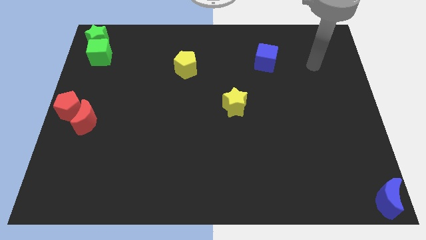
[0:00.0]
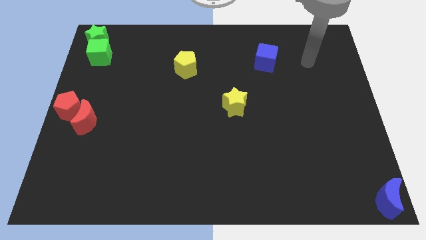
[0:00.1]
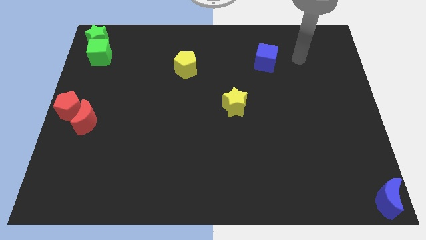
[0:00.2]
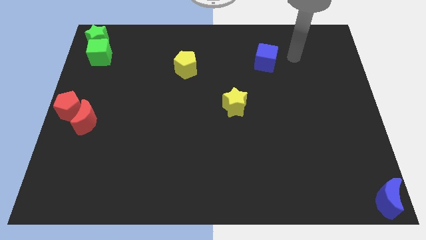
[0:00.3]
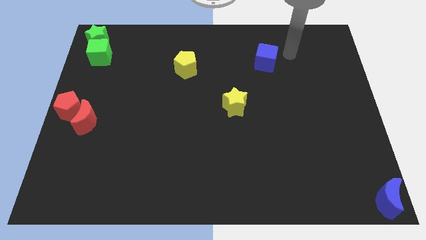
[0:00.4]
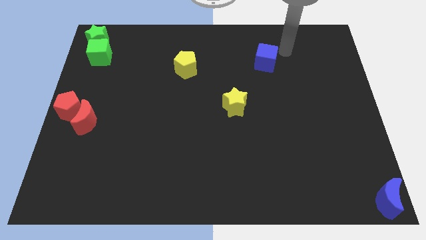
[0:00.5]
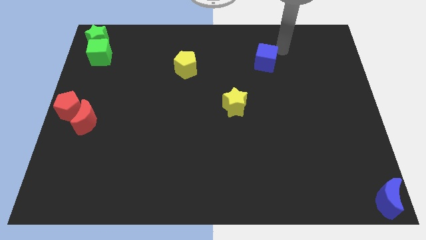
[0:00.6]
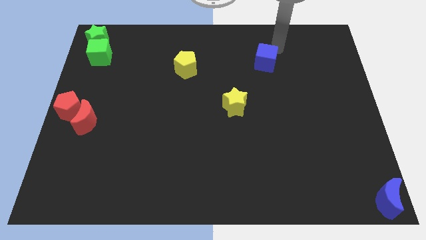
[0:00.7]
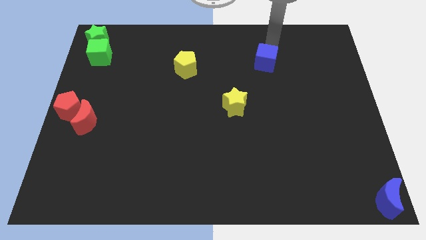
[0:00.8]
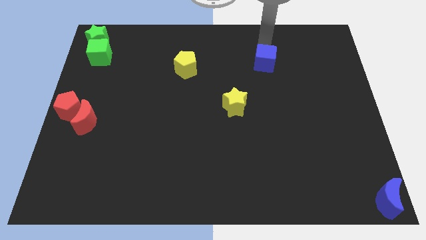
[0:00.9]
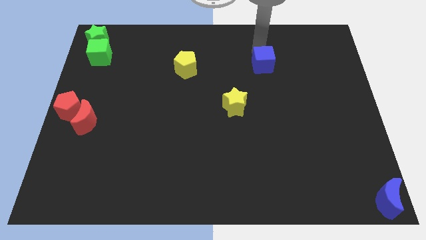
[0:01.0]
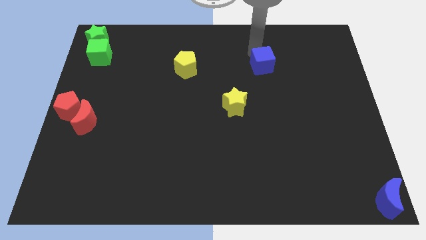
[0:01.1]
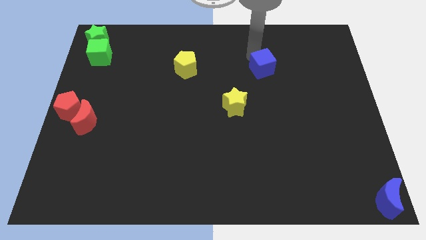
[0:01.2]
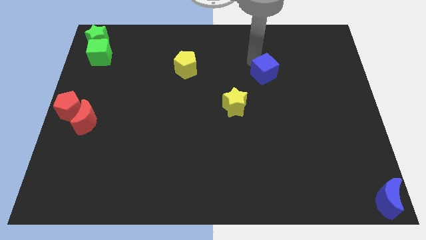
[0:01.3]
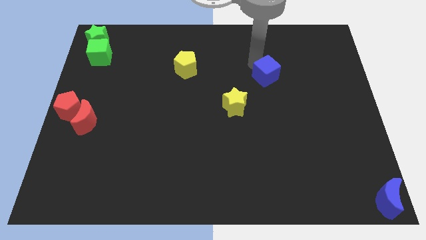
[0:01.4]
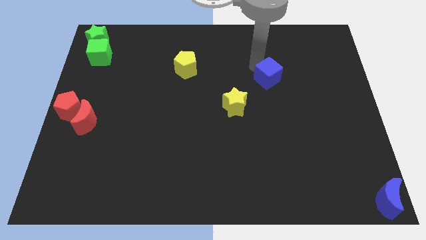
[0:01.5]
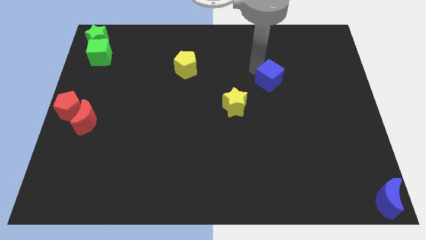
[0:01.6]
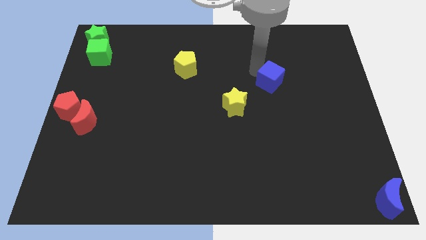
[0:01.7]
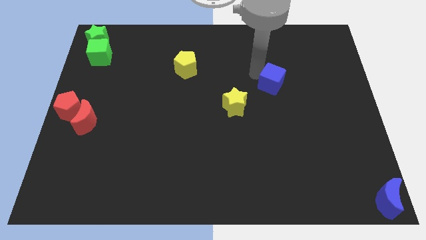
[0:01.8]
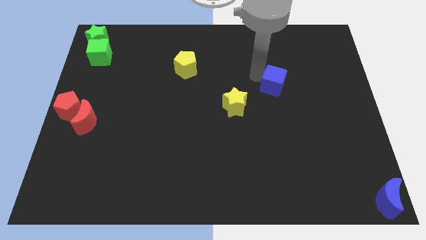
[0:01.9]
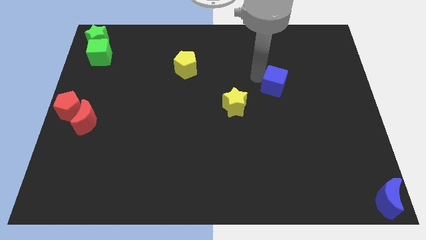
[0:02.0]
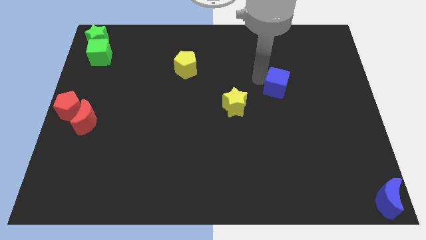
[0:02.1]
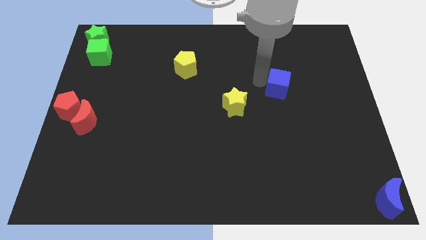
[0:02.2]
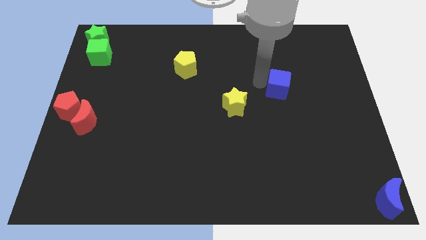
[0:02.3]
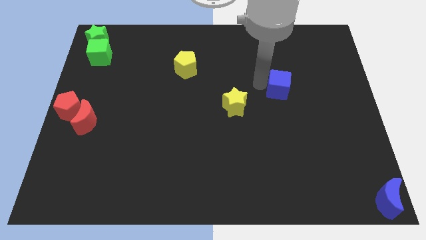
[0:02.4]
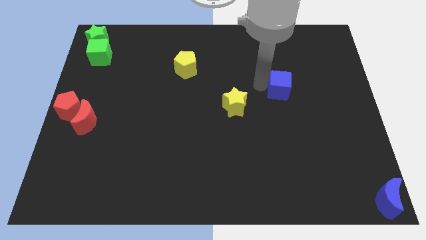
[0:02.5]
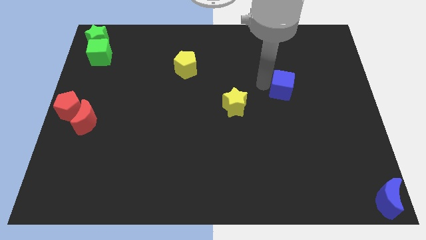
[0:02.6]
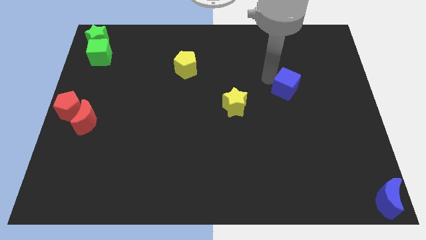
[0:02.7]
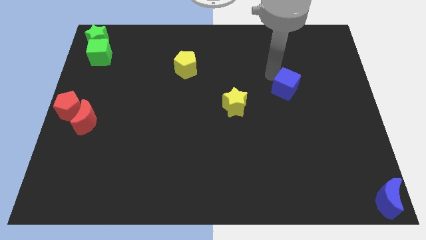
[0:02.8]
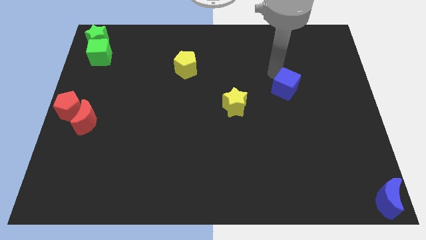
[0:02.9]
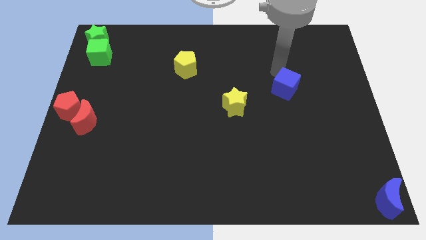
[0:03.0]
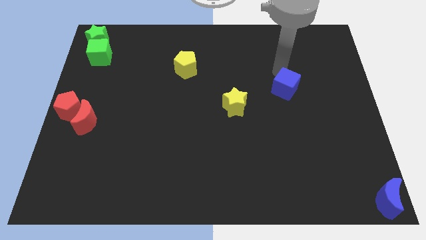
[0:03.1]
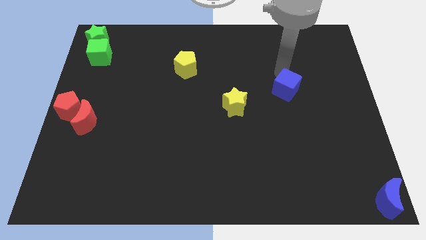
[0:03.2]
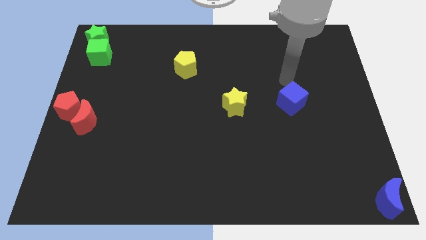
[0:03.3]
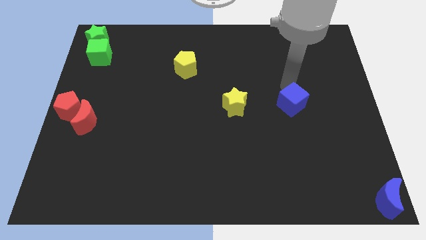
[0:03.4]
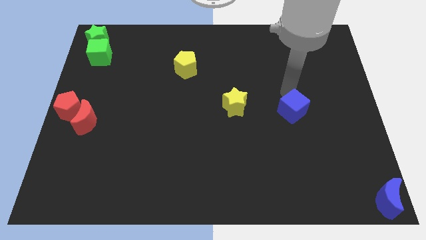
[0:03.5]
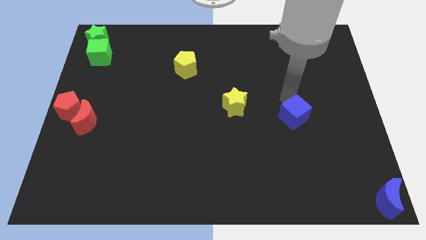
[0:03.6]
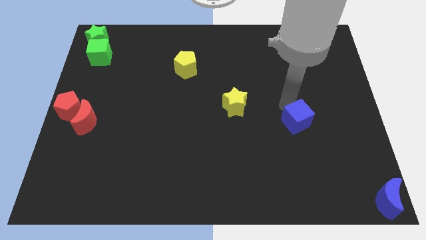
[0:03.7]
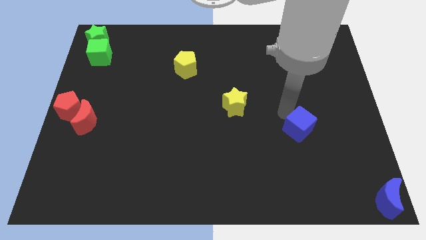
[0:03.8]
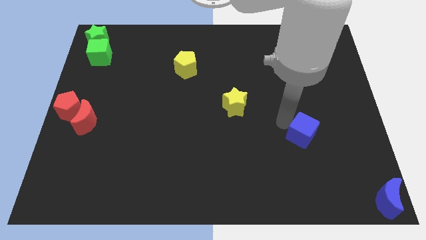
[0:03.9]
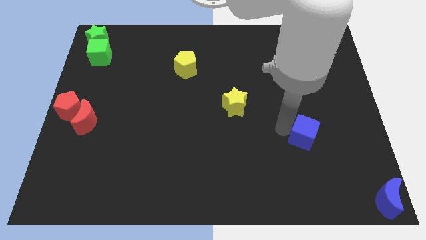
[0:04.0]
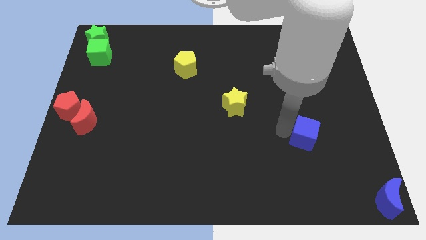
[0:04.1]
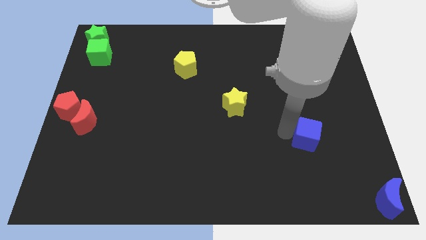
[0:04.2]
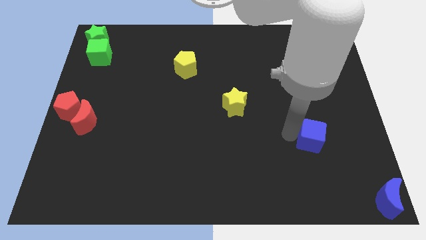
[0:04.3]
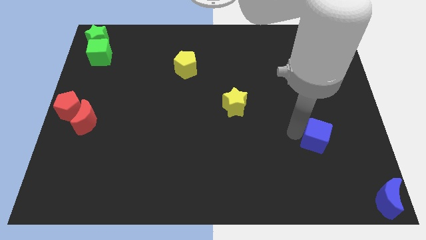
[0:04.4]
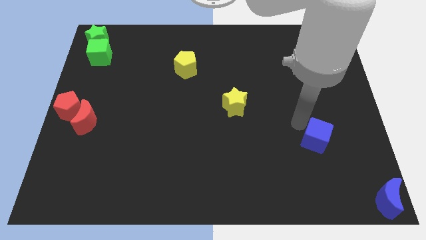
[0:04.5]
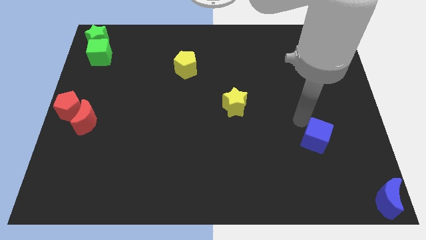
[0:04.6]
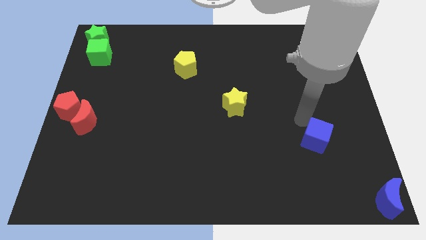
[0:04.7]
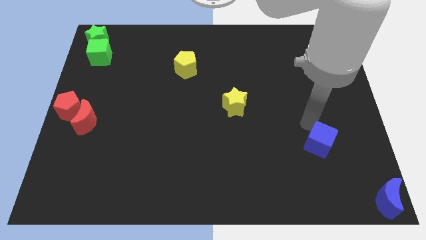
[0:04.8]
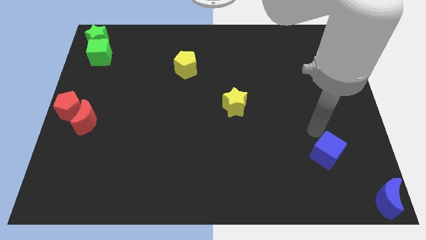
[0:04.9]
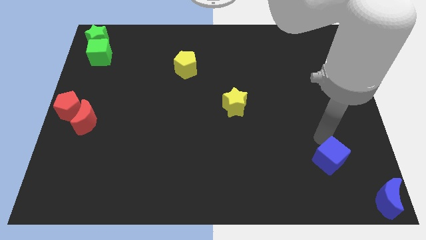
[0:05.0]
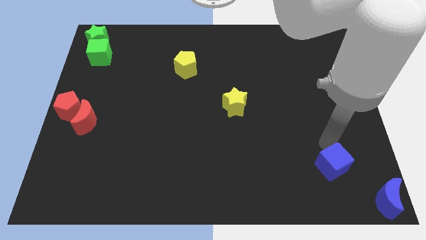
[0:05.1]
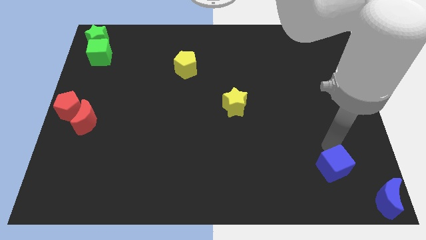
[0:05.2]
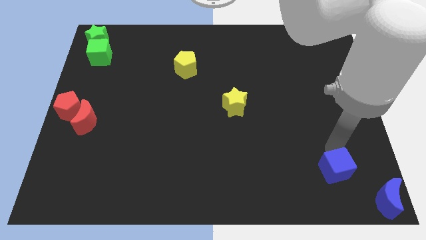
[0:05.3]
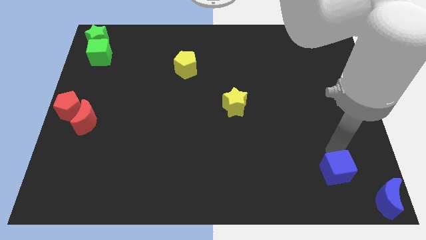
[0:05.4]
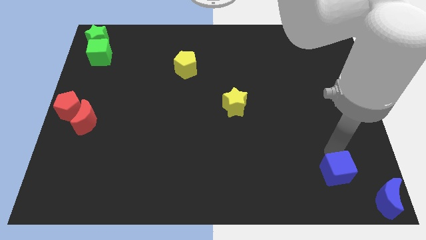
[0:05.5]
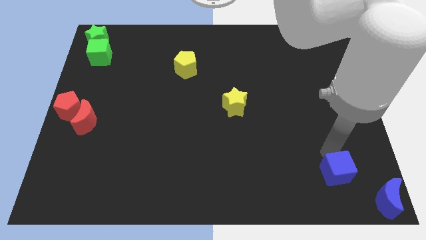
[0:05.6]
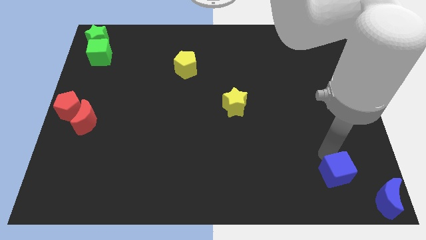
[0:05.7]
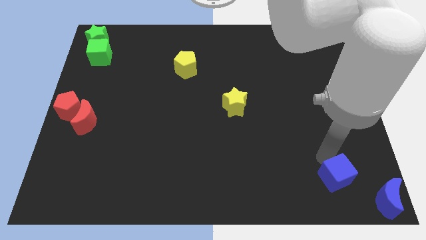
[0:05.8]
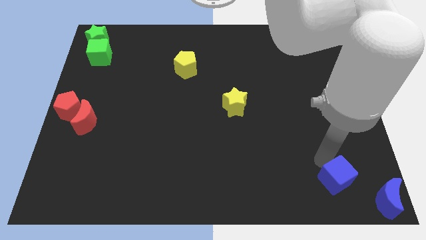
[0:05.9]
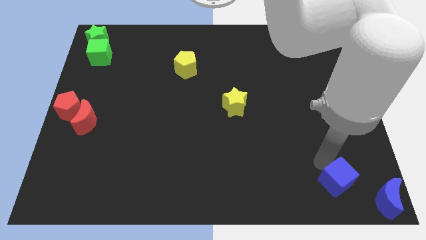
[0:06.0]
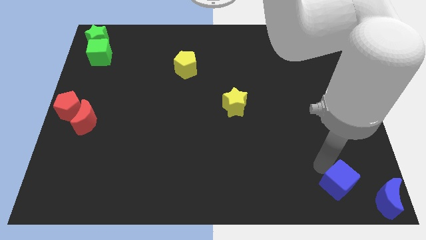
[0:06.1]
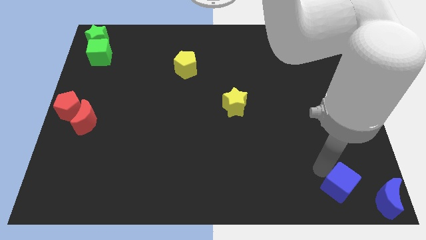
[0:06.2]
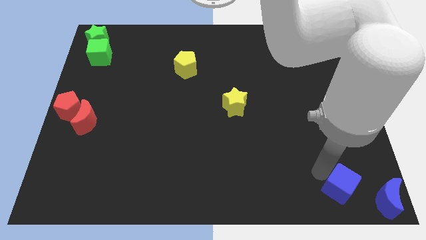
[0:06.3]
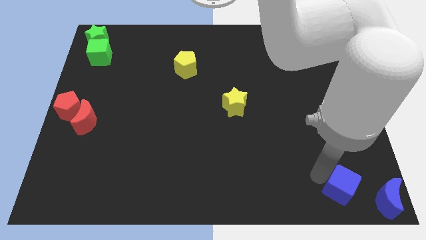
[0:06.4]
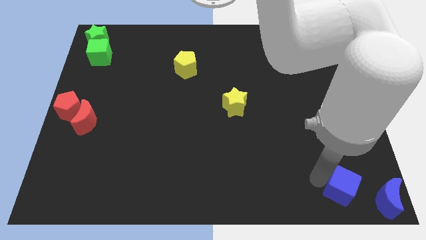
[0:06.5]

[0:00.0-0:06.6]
move the blue cube to the left of the blue crescent

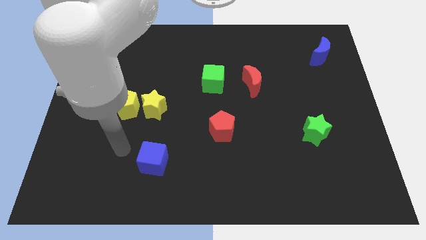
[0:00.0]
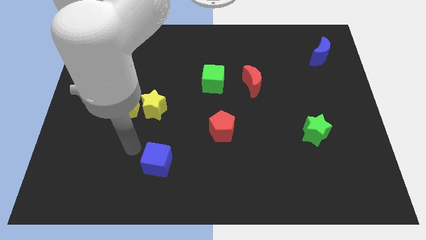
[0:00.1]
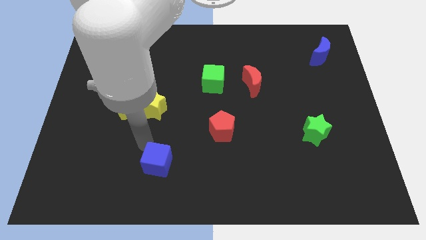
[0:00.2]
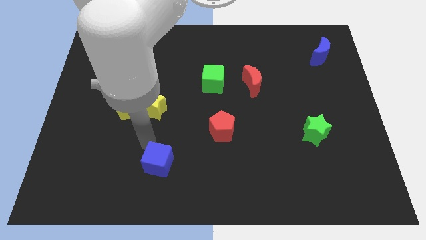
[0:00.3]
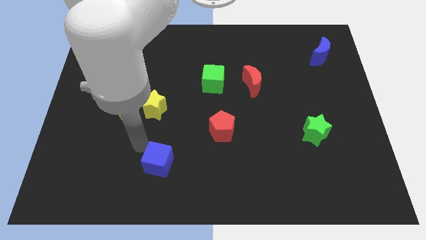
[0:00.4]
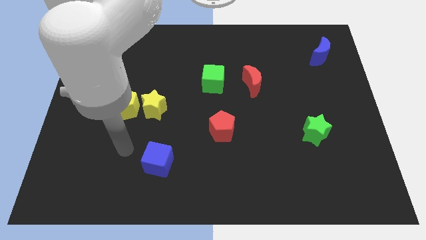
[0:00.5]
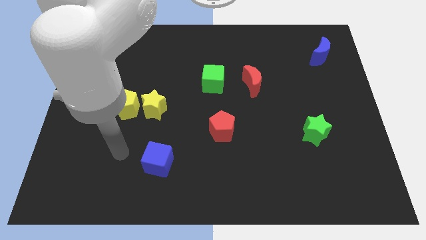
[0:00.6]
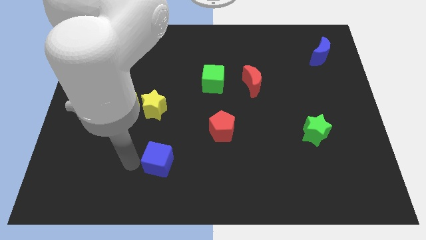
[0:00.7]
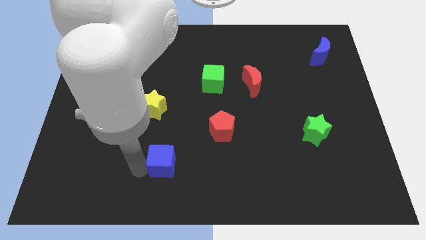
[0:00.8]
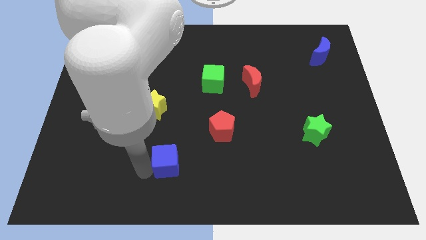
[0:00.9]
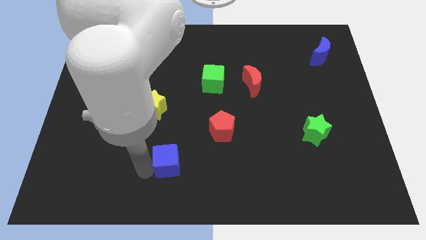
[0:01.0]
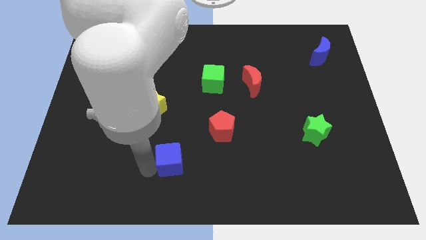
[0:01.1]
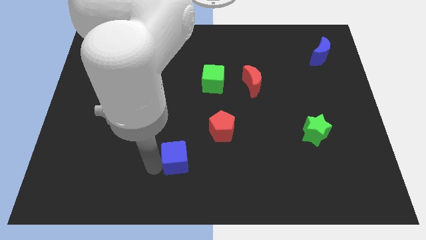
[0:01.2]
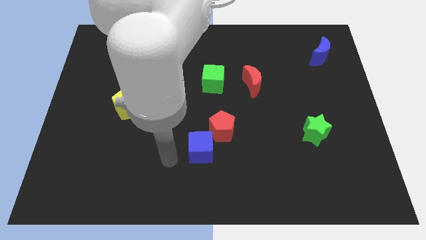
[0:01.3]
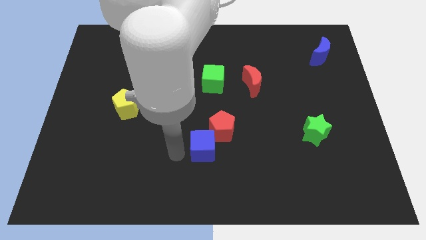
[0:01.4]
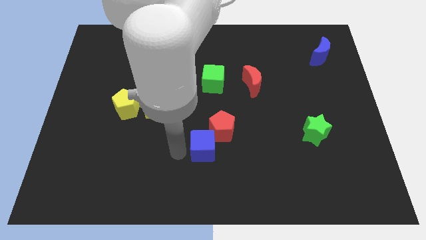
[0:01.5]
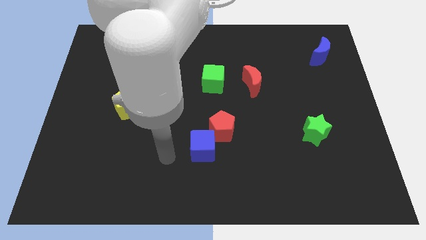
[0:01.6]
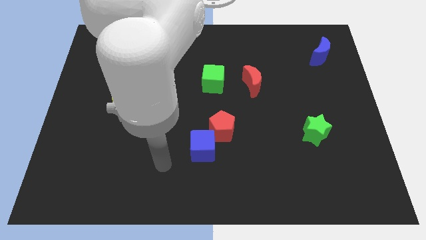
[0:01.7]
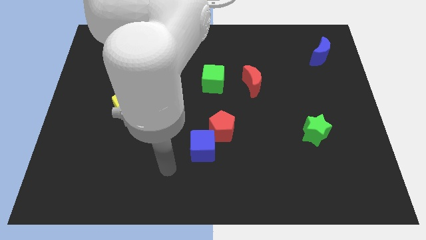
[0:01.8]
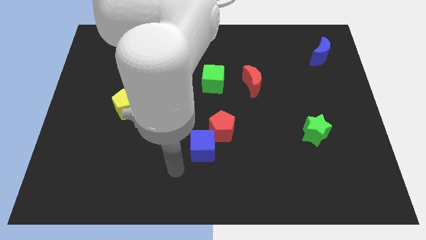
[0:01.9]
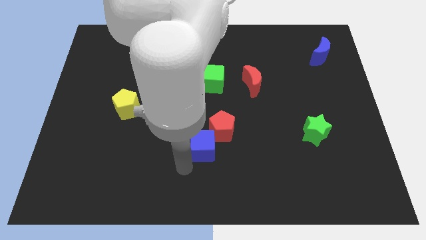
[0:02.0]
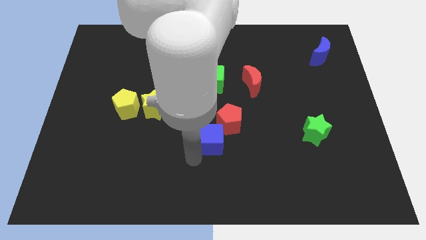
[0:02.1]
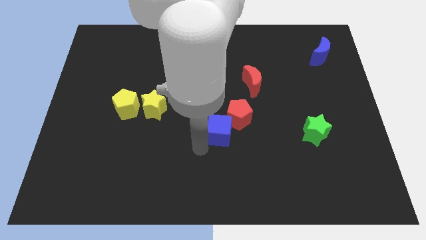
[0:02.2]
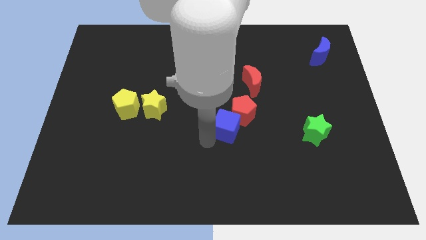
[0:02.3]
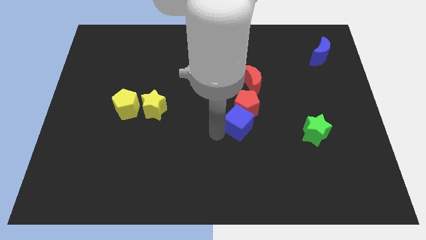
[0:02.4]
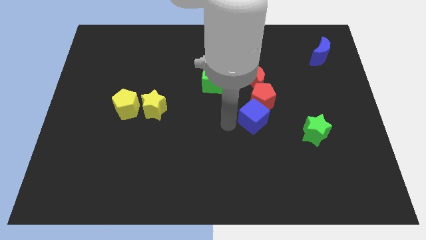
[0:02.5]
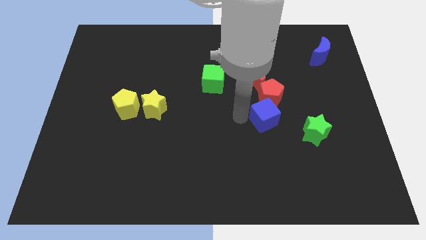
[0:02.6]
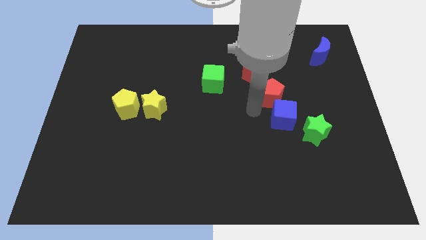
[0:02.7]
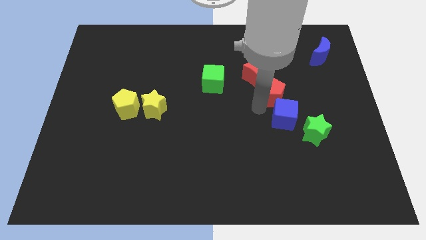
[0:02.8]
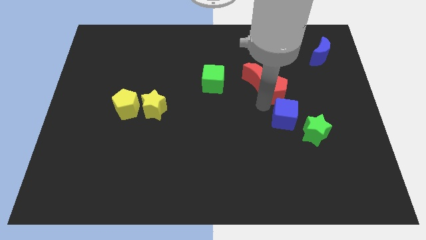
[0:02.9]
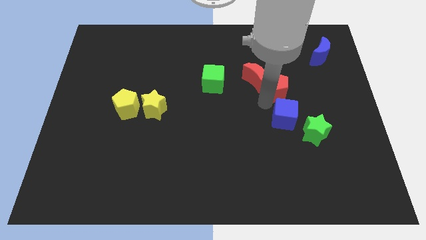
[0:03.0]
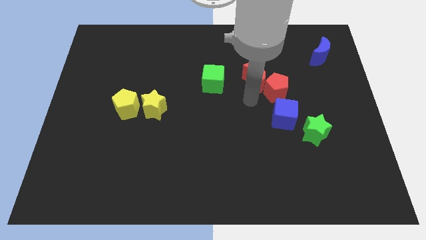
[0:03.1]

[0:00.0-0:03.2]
push the red pentagon and blue cube to the bottom right side of the red crescent
